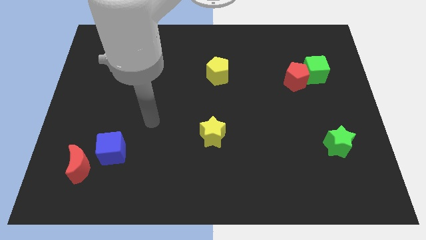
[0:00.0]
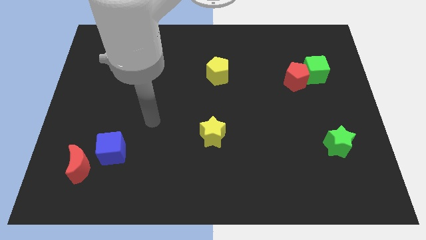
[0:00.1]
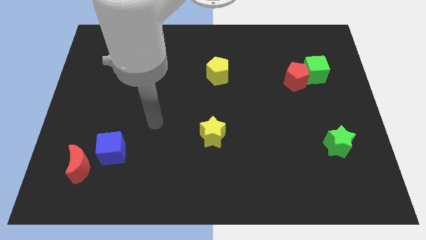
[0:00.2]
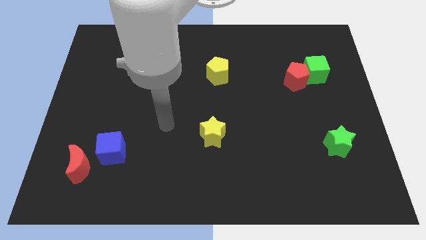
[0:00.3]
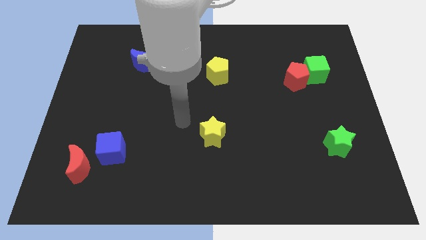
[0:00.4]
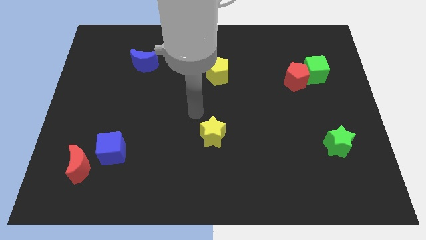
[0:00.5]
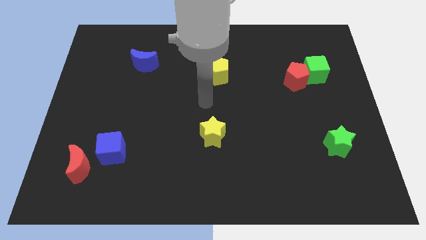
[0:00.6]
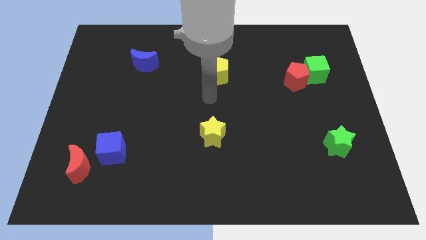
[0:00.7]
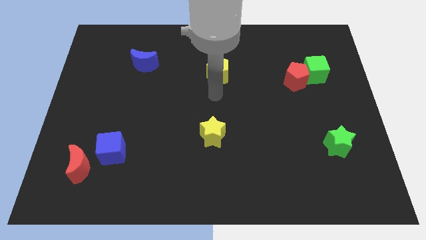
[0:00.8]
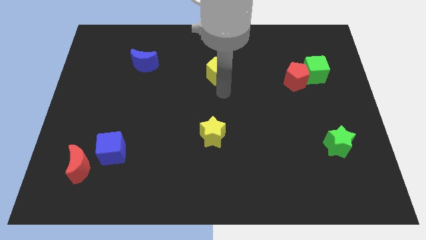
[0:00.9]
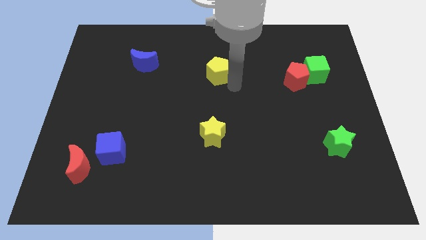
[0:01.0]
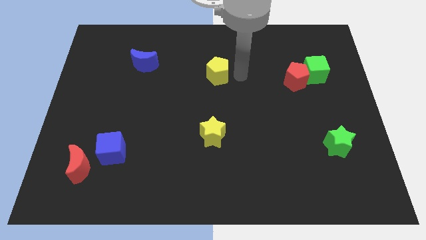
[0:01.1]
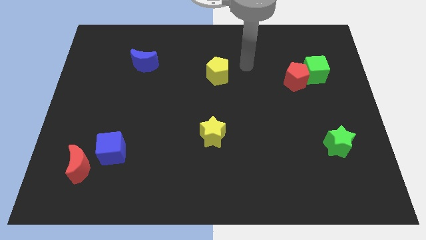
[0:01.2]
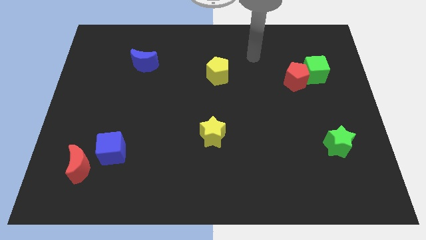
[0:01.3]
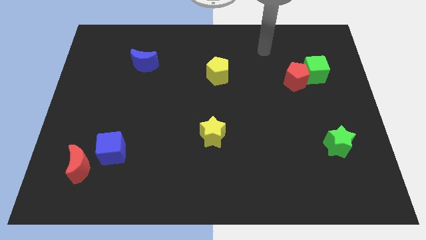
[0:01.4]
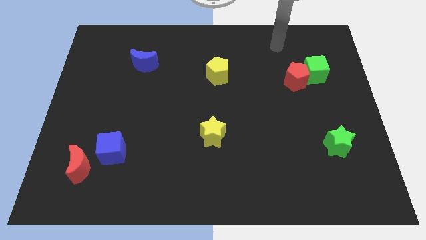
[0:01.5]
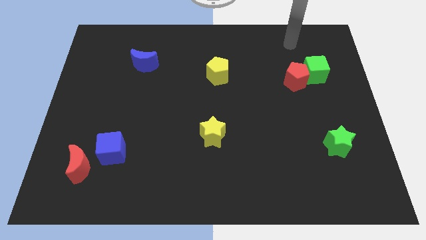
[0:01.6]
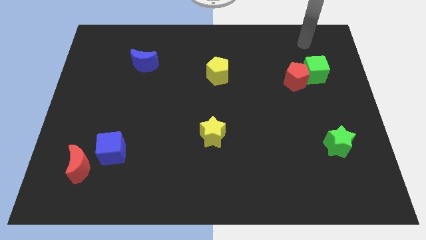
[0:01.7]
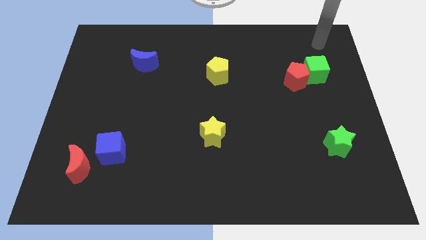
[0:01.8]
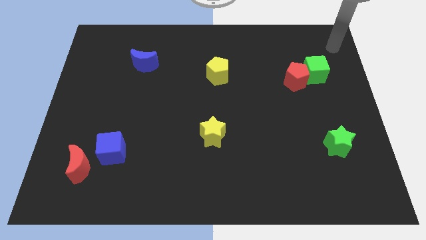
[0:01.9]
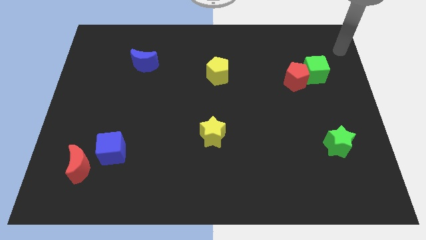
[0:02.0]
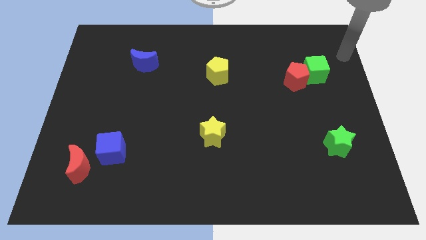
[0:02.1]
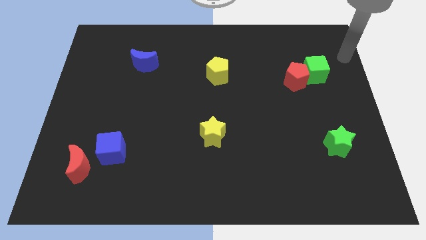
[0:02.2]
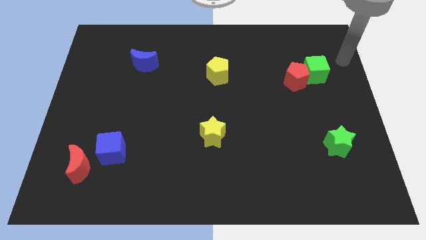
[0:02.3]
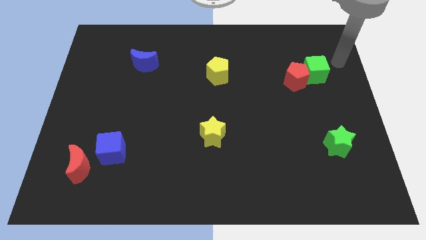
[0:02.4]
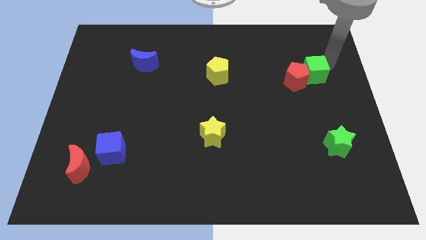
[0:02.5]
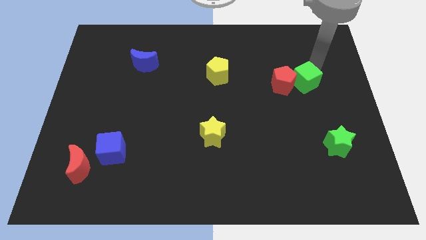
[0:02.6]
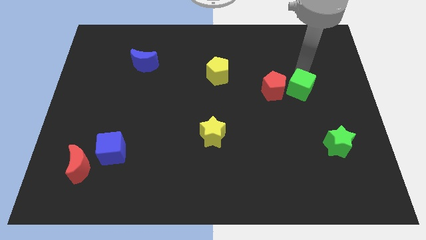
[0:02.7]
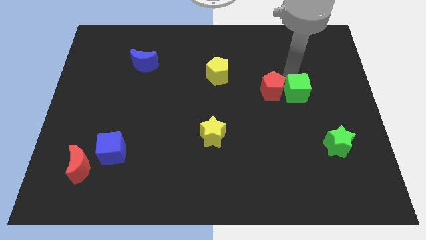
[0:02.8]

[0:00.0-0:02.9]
push green cube slightly towards left

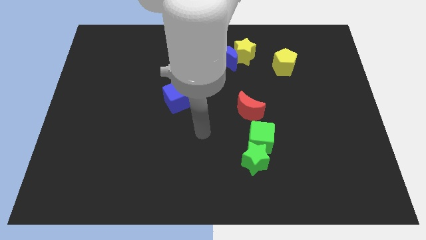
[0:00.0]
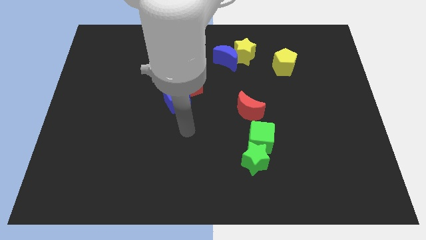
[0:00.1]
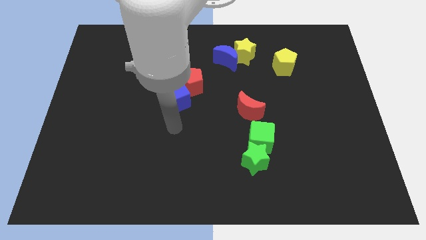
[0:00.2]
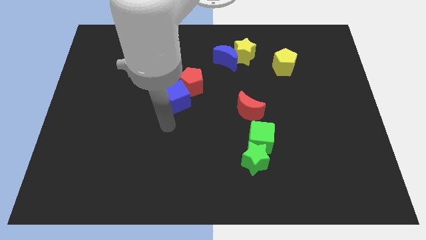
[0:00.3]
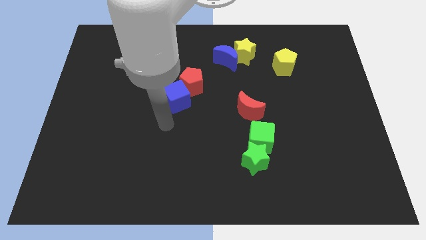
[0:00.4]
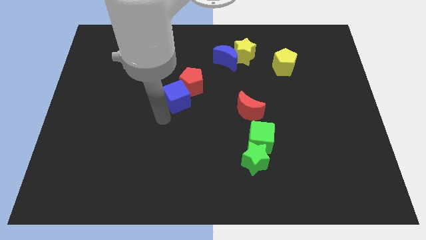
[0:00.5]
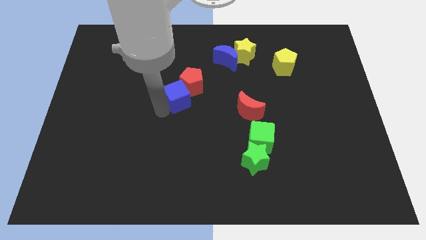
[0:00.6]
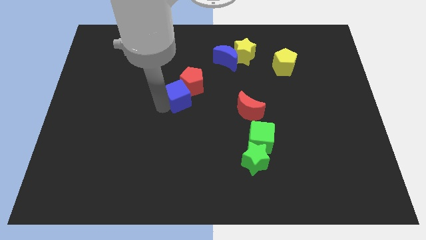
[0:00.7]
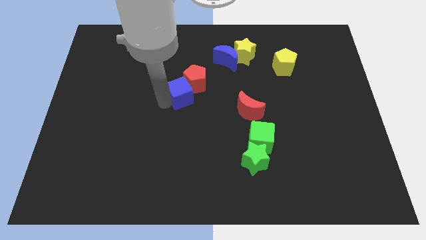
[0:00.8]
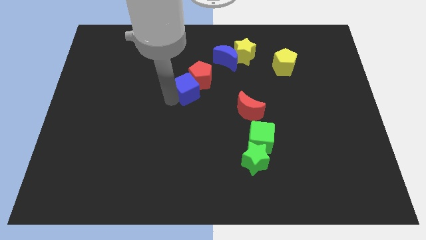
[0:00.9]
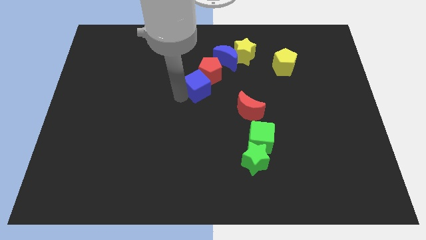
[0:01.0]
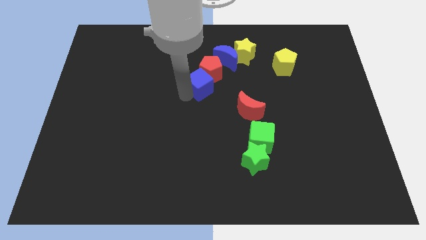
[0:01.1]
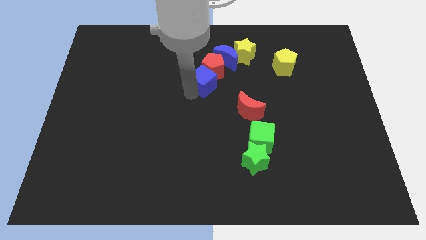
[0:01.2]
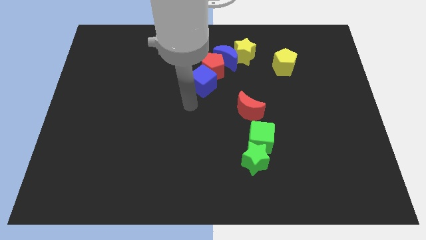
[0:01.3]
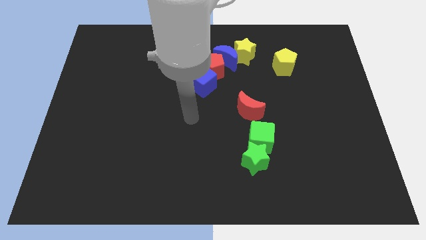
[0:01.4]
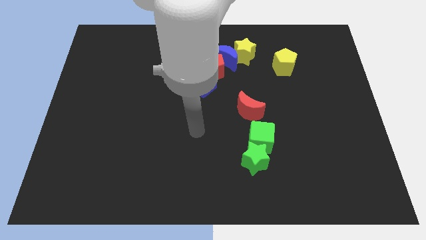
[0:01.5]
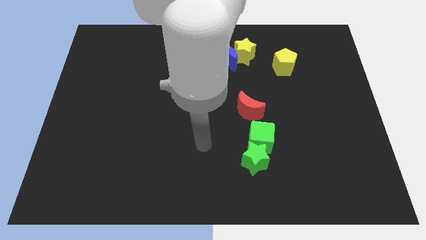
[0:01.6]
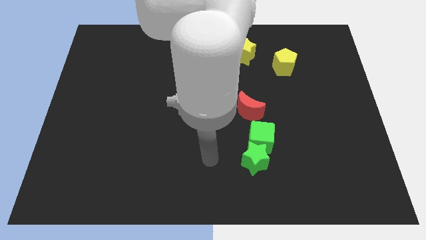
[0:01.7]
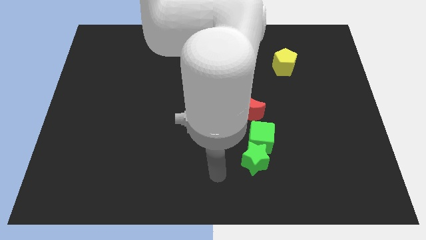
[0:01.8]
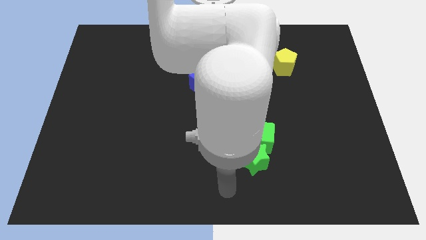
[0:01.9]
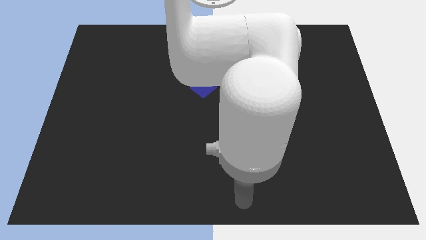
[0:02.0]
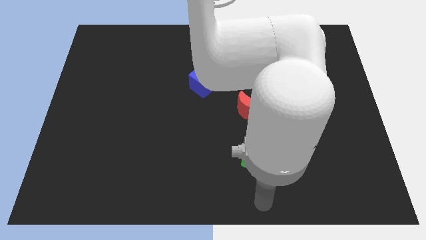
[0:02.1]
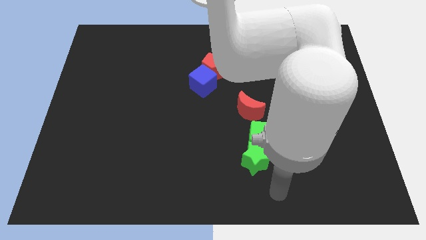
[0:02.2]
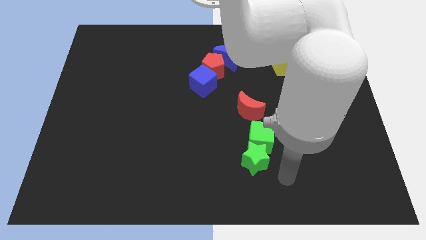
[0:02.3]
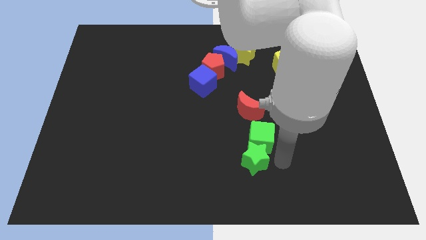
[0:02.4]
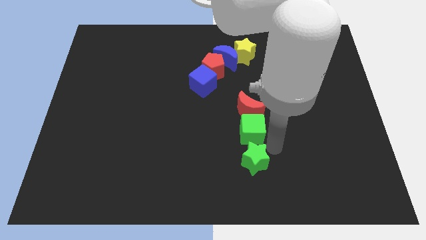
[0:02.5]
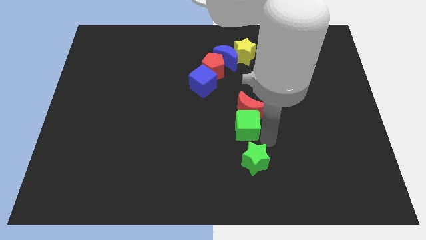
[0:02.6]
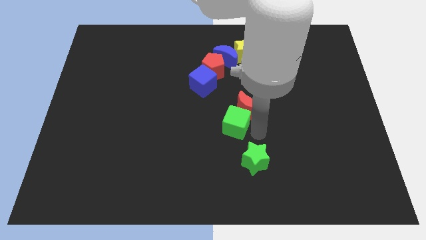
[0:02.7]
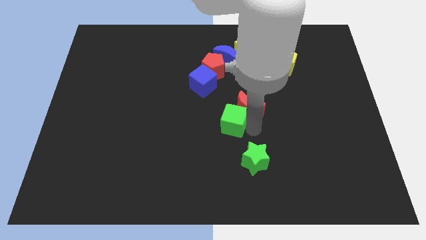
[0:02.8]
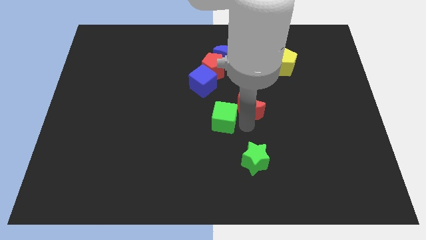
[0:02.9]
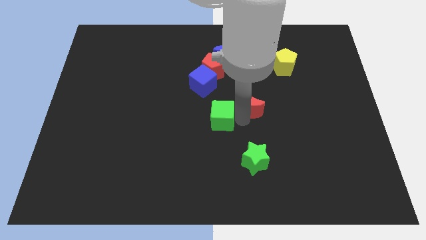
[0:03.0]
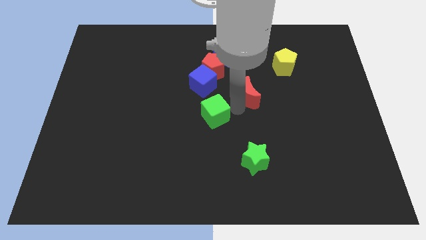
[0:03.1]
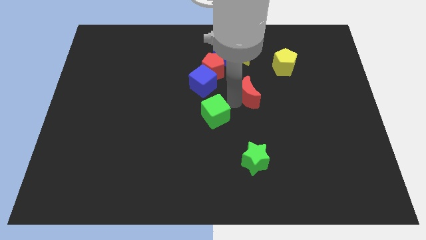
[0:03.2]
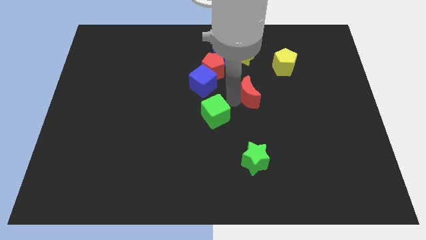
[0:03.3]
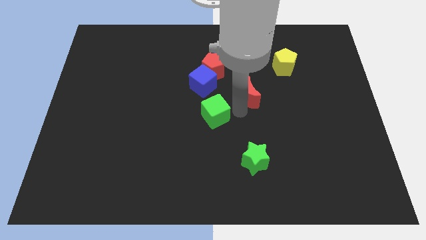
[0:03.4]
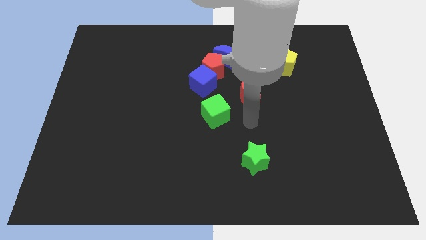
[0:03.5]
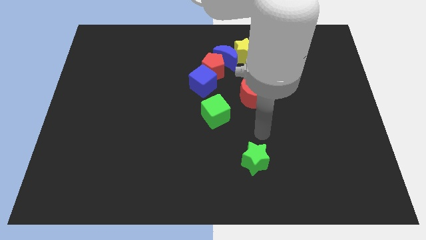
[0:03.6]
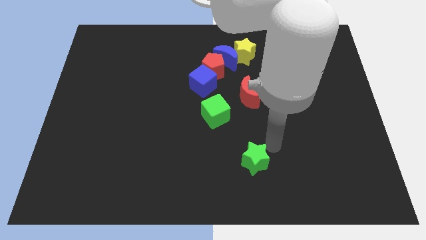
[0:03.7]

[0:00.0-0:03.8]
move green cube to the center of the board

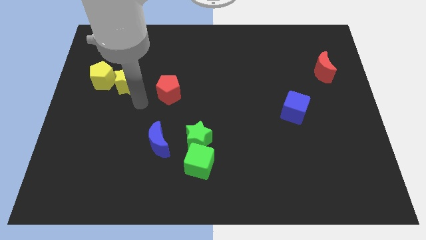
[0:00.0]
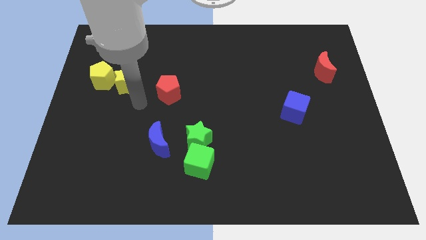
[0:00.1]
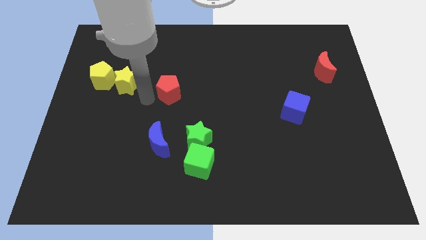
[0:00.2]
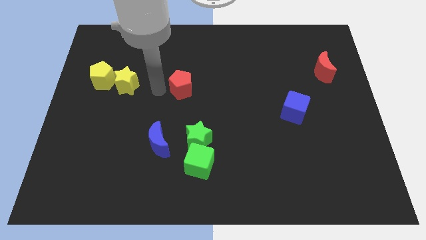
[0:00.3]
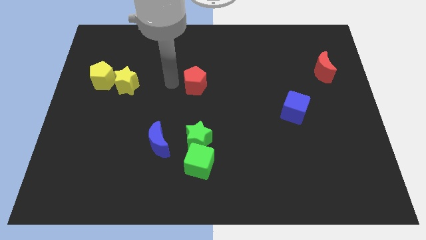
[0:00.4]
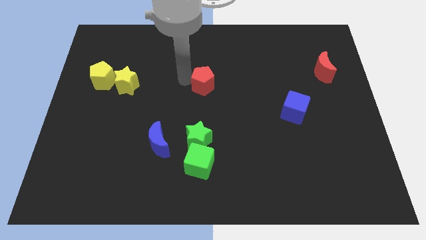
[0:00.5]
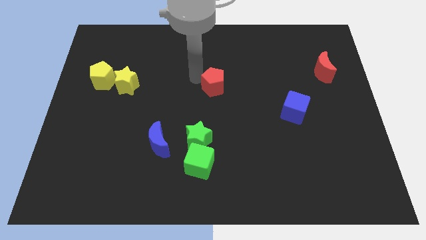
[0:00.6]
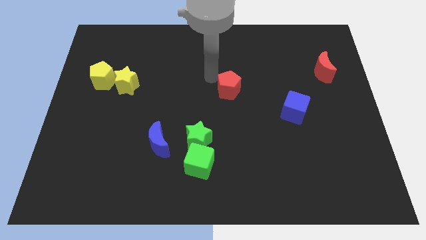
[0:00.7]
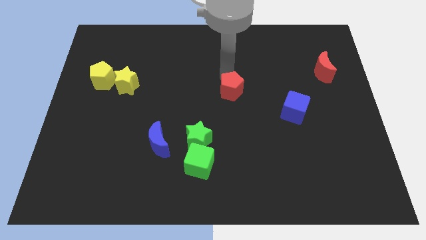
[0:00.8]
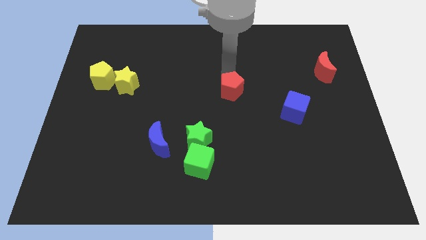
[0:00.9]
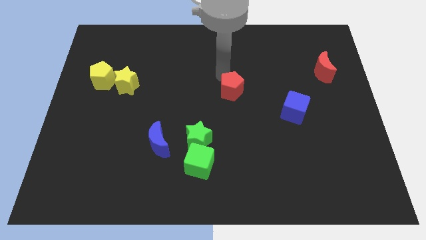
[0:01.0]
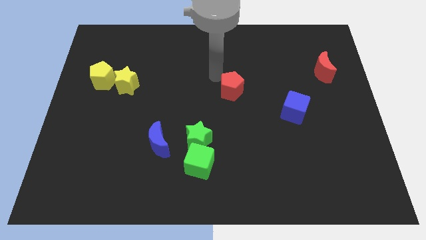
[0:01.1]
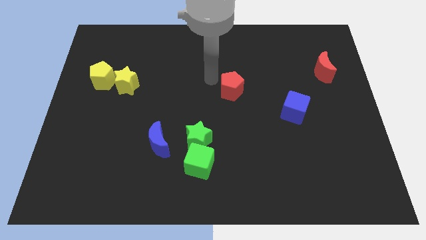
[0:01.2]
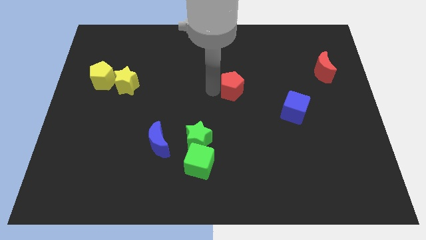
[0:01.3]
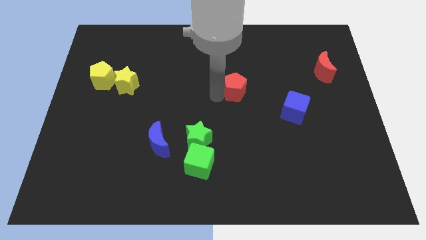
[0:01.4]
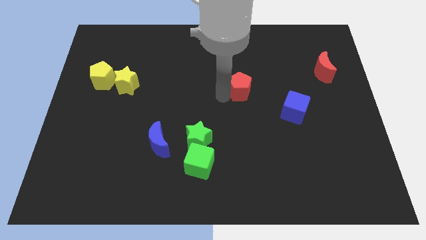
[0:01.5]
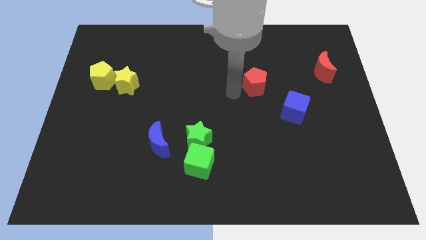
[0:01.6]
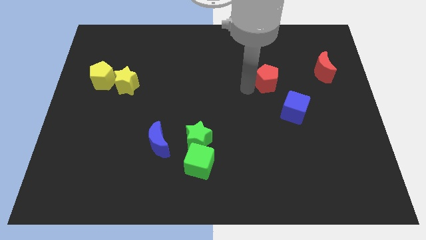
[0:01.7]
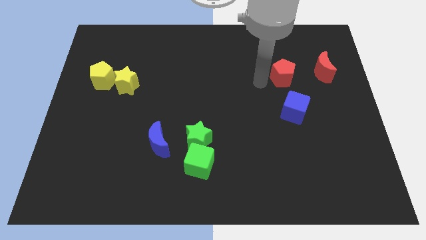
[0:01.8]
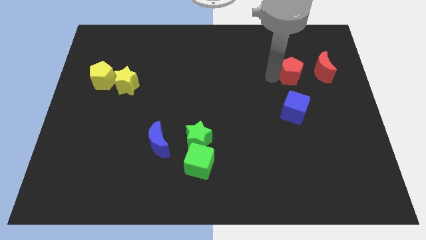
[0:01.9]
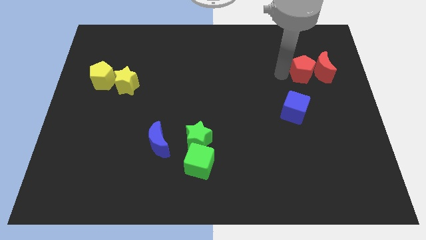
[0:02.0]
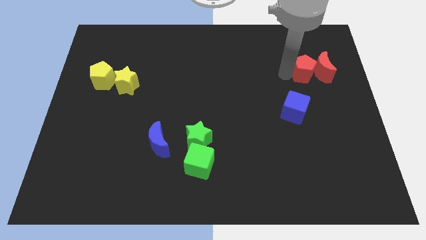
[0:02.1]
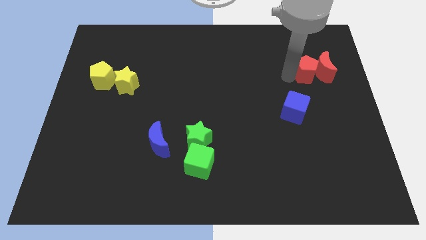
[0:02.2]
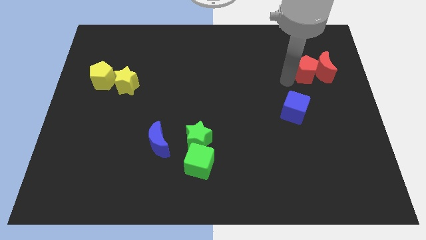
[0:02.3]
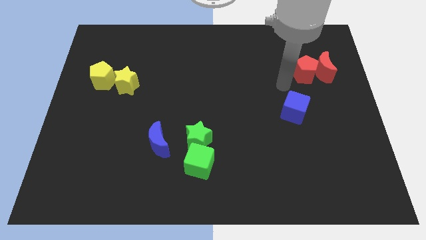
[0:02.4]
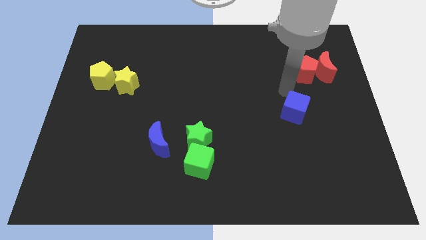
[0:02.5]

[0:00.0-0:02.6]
move red pentagon left to the red moon
